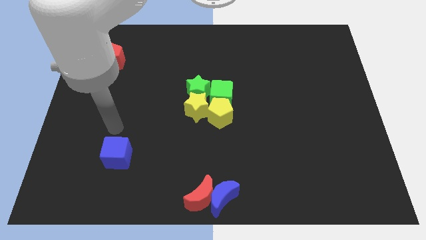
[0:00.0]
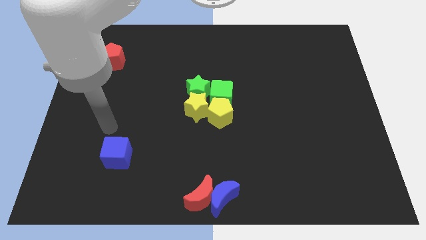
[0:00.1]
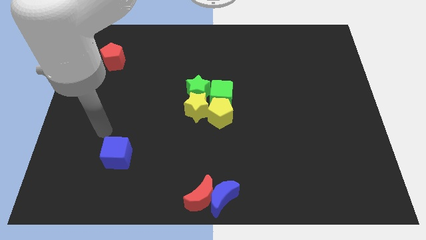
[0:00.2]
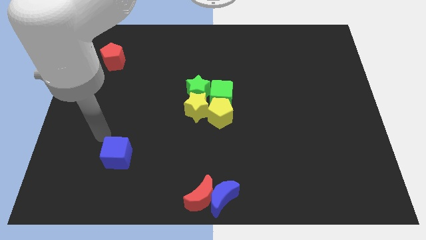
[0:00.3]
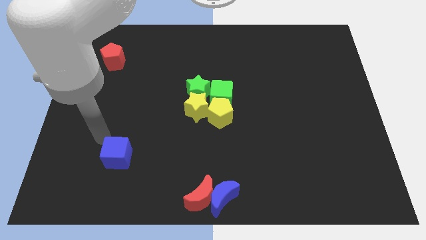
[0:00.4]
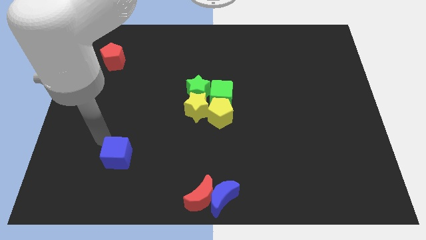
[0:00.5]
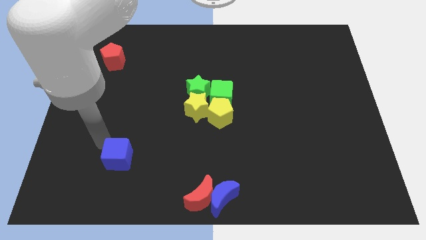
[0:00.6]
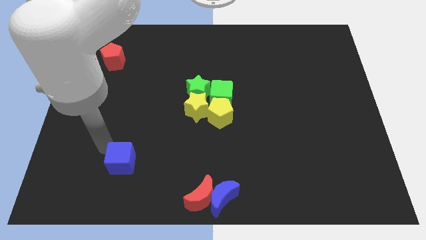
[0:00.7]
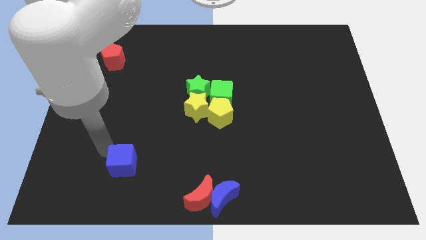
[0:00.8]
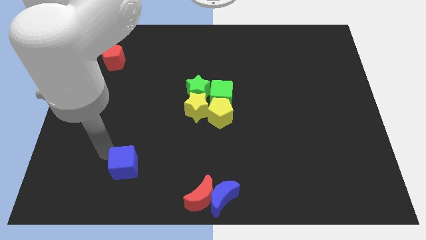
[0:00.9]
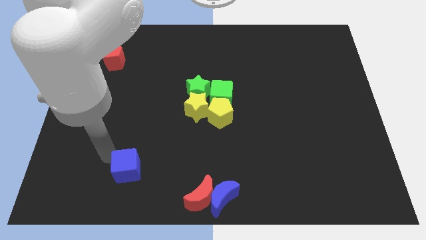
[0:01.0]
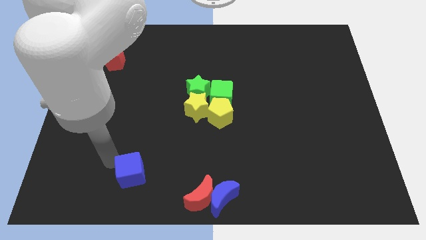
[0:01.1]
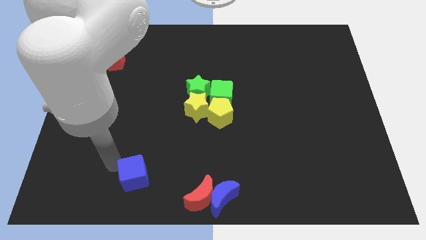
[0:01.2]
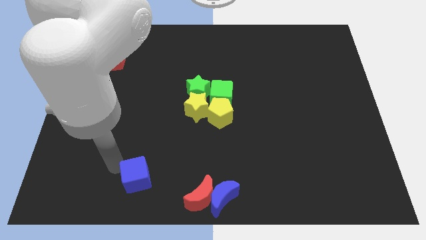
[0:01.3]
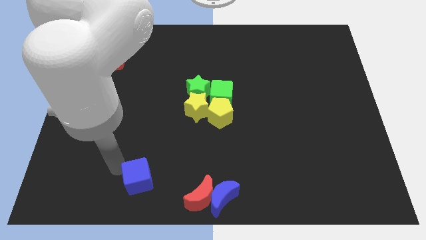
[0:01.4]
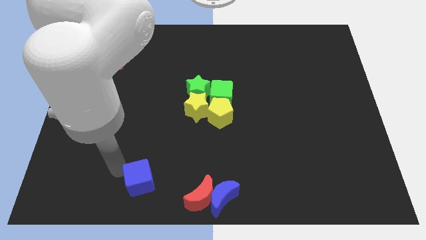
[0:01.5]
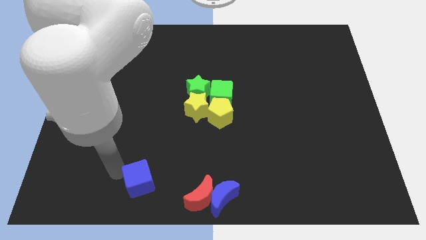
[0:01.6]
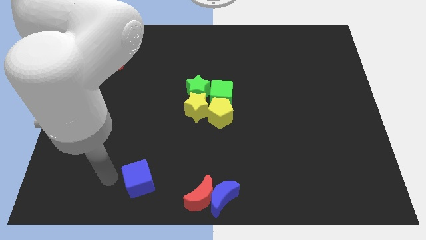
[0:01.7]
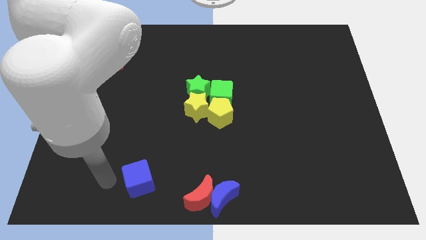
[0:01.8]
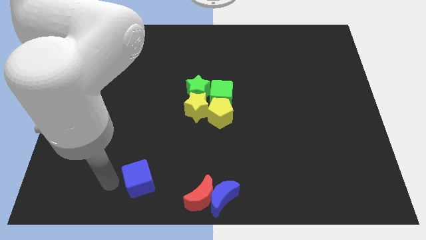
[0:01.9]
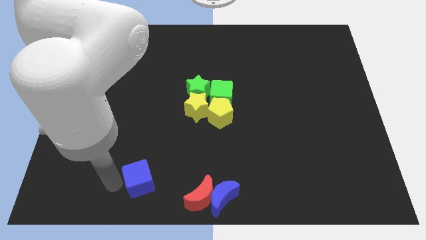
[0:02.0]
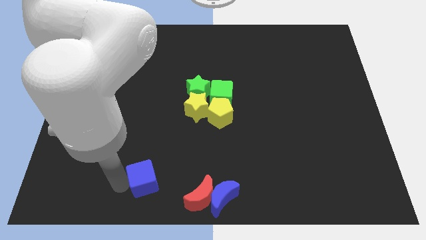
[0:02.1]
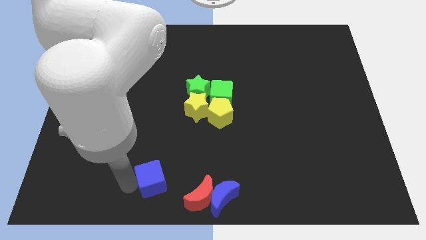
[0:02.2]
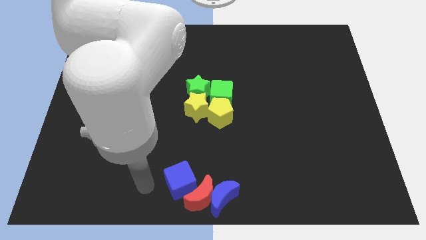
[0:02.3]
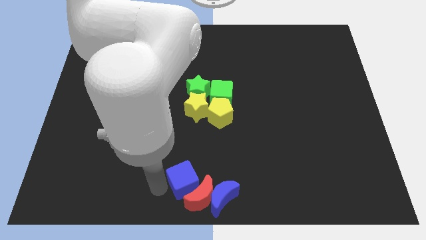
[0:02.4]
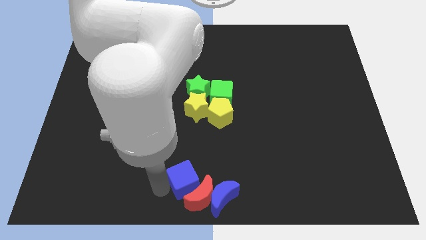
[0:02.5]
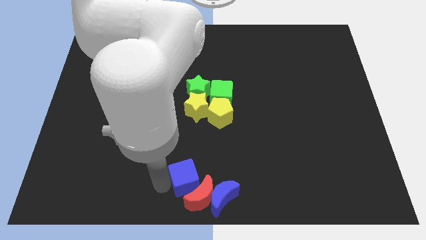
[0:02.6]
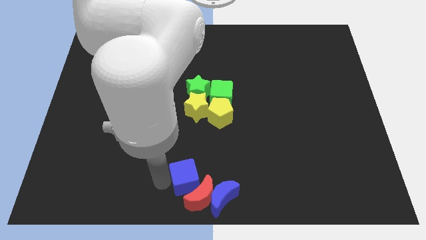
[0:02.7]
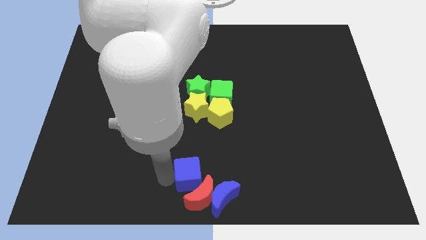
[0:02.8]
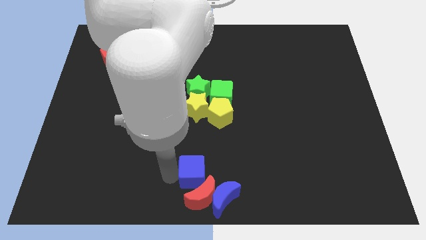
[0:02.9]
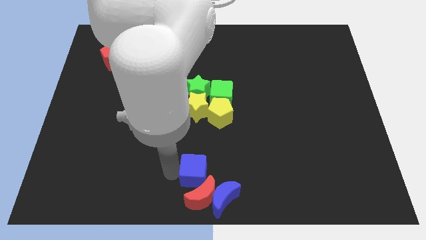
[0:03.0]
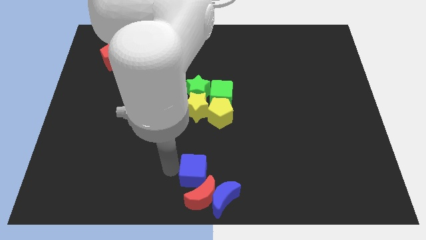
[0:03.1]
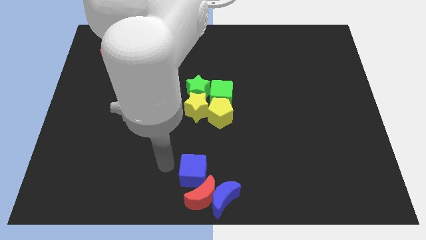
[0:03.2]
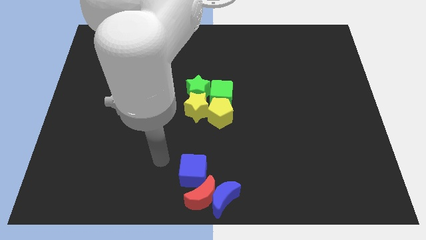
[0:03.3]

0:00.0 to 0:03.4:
push the blue cube to the group of object

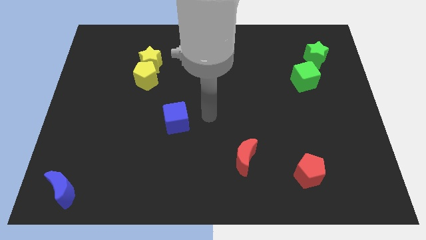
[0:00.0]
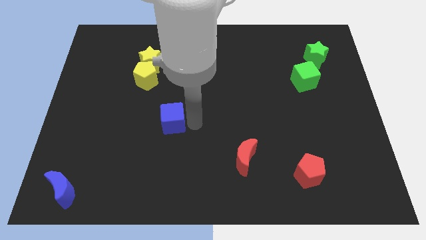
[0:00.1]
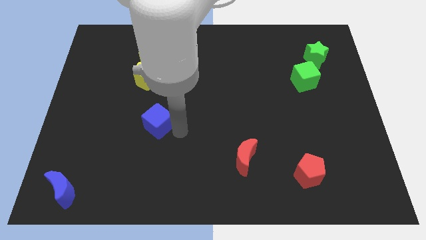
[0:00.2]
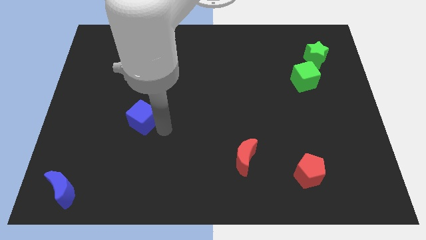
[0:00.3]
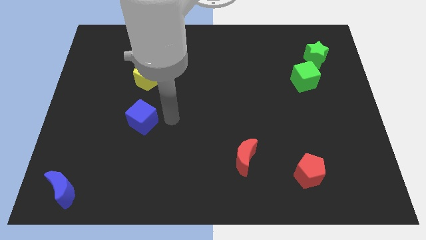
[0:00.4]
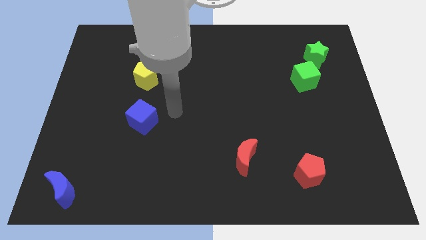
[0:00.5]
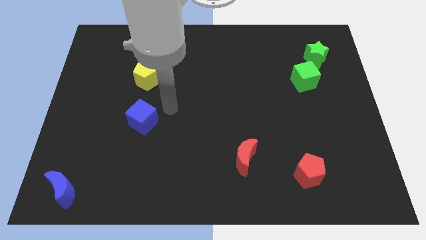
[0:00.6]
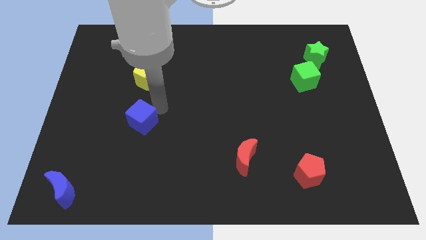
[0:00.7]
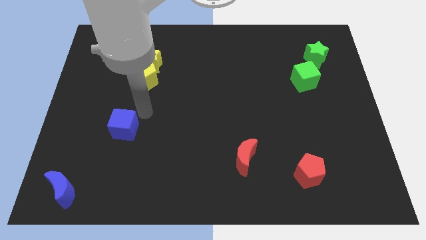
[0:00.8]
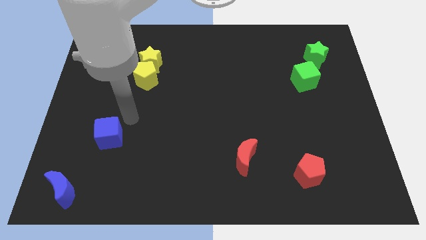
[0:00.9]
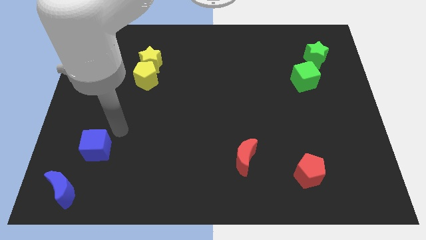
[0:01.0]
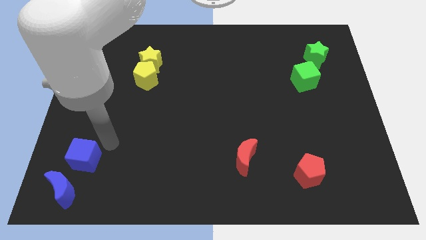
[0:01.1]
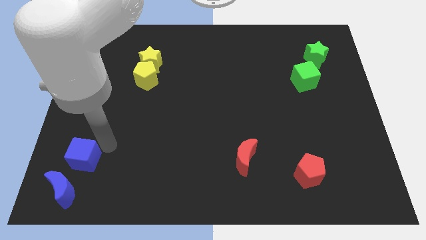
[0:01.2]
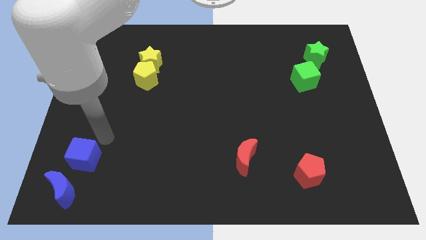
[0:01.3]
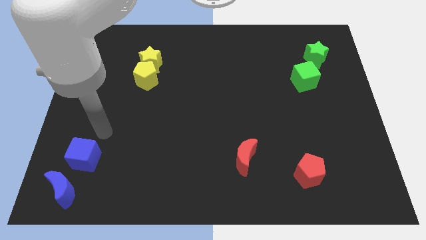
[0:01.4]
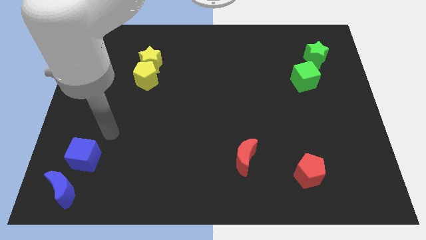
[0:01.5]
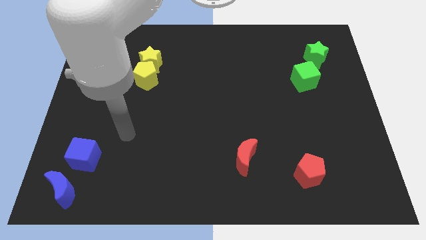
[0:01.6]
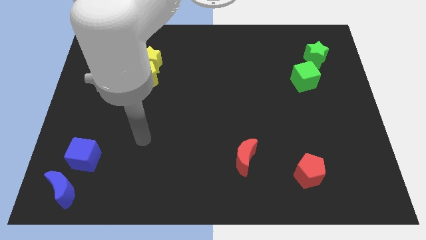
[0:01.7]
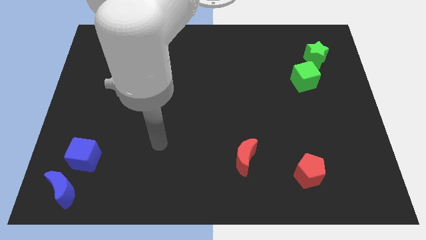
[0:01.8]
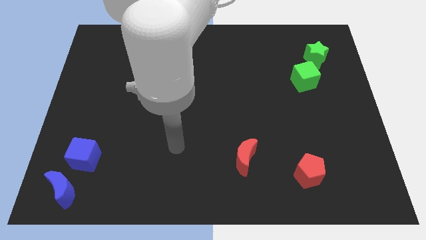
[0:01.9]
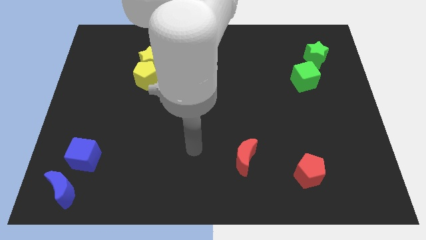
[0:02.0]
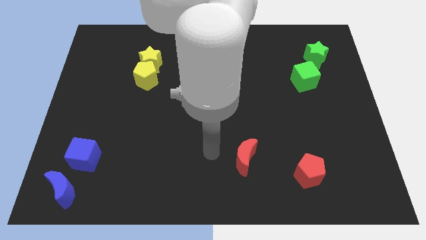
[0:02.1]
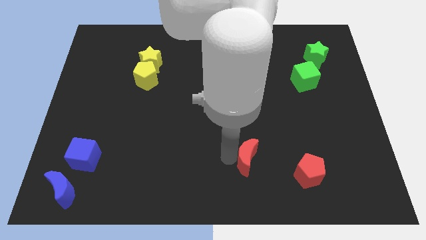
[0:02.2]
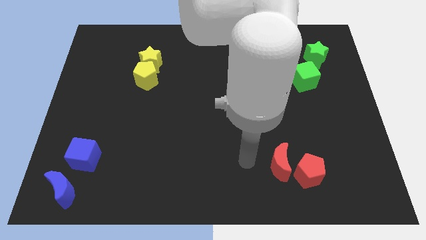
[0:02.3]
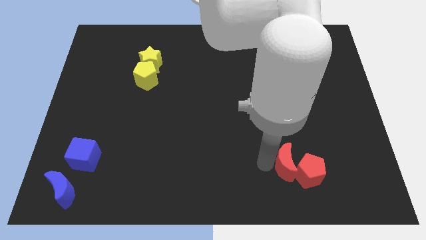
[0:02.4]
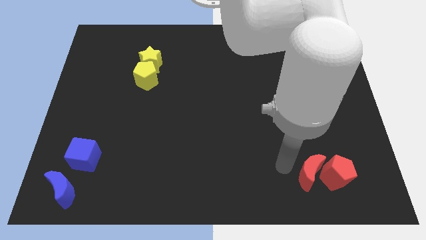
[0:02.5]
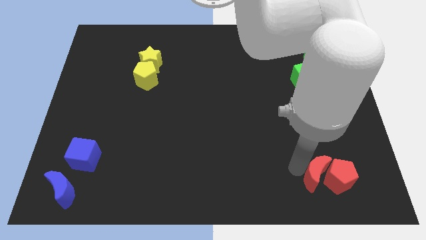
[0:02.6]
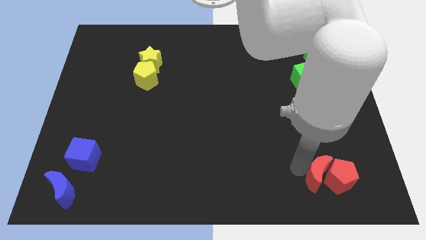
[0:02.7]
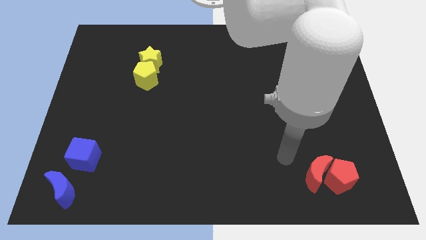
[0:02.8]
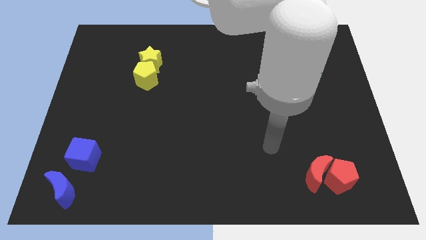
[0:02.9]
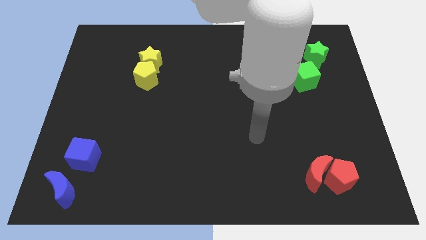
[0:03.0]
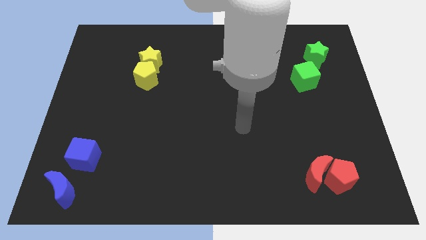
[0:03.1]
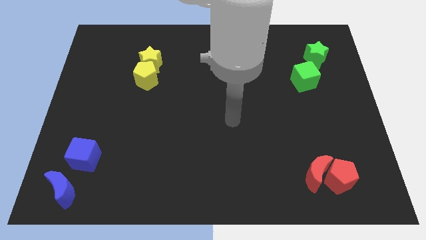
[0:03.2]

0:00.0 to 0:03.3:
push the red crescent along with the red pentagon towards the bottom right corner of the board

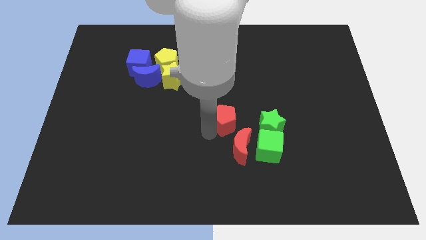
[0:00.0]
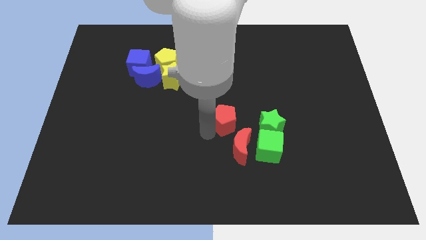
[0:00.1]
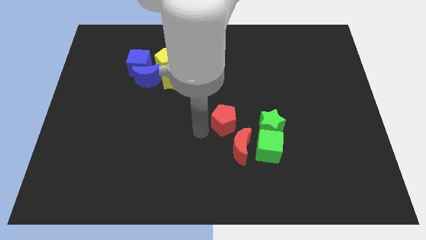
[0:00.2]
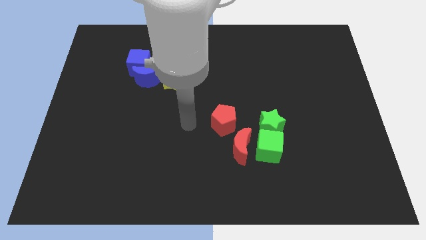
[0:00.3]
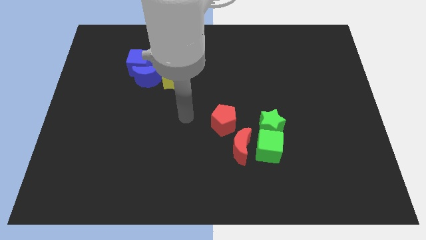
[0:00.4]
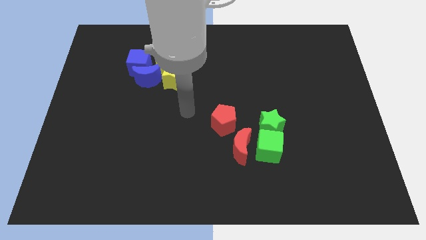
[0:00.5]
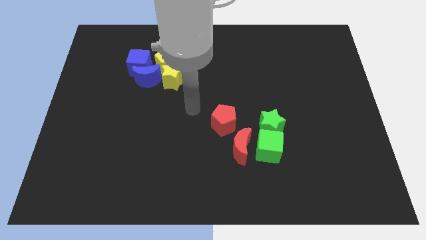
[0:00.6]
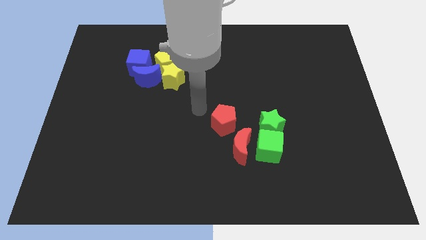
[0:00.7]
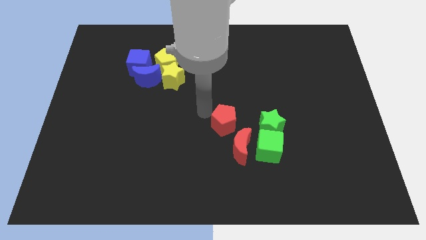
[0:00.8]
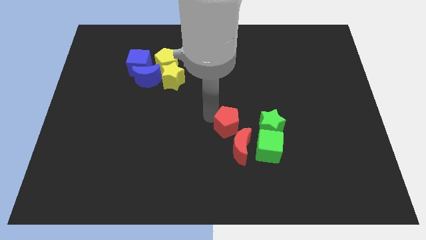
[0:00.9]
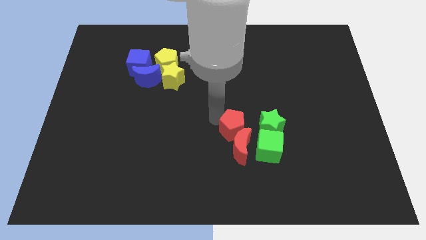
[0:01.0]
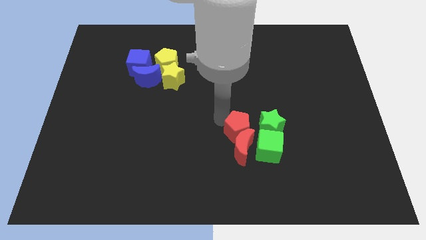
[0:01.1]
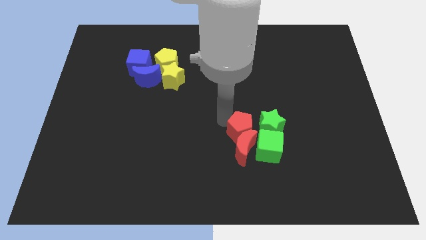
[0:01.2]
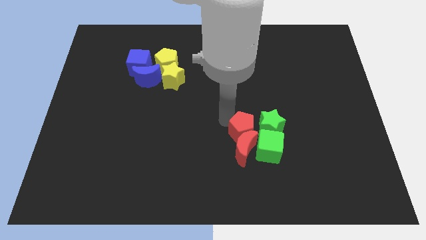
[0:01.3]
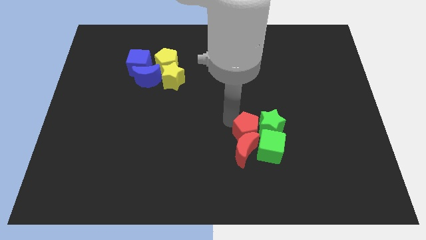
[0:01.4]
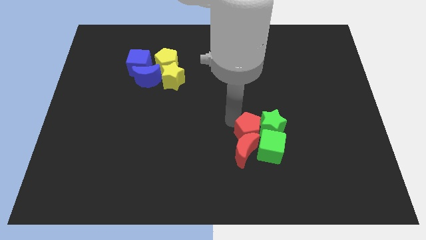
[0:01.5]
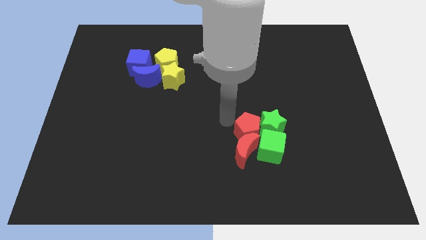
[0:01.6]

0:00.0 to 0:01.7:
push the red pentagon into the top side of the red crescent

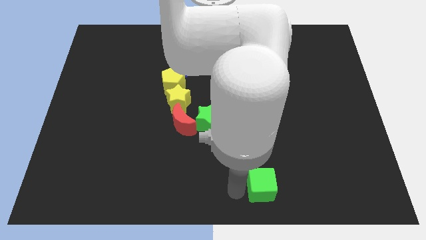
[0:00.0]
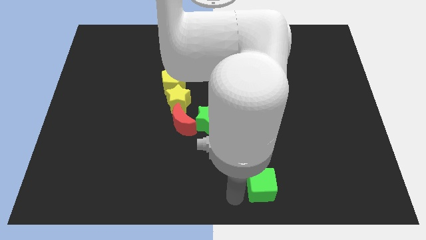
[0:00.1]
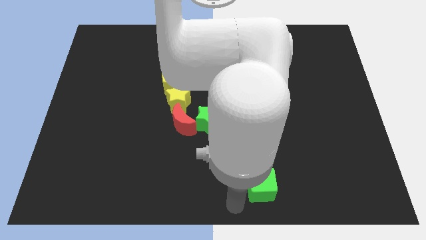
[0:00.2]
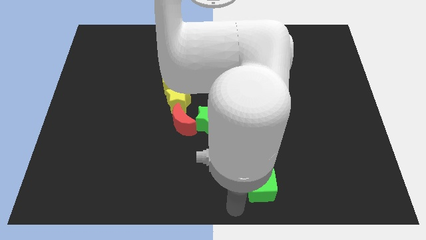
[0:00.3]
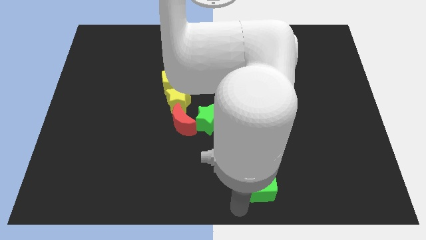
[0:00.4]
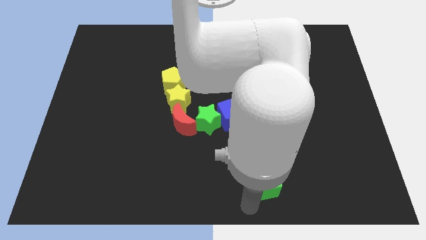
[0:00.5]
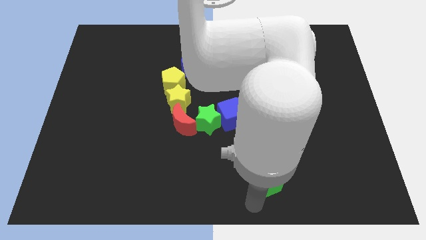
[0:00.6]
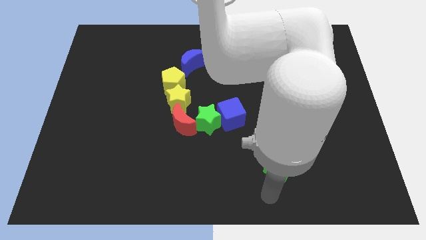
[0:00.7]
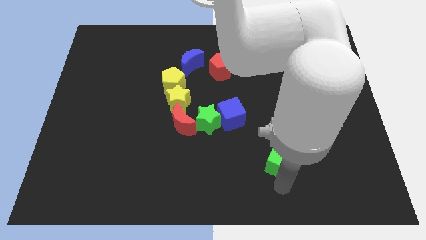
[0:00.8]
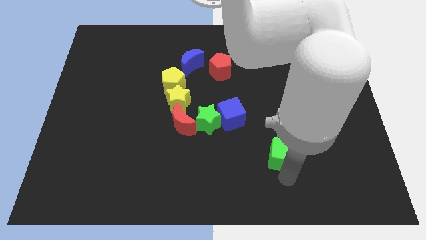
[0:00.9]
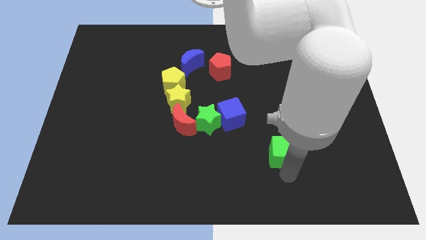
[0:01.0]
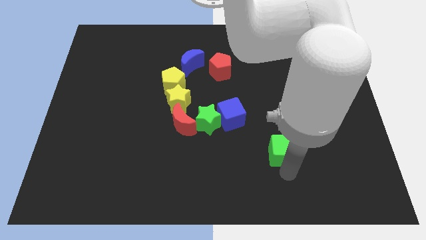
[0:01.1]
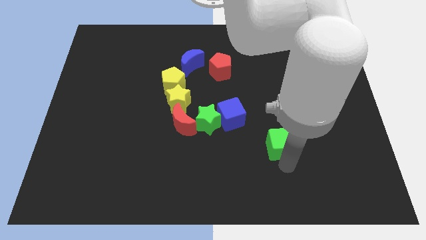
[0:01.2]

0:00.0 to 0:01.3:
place the green cube diagonally bottom right to the blue cube
